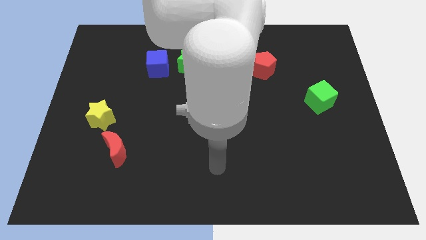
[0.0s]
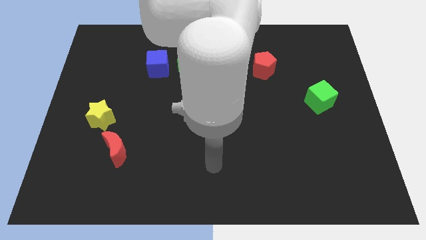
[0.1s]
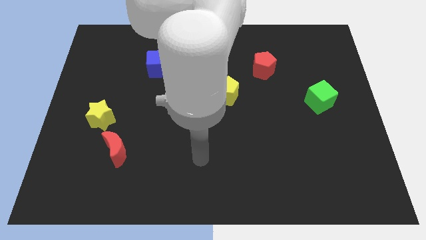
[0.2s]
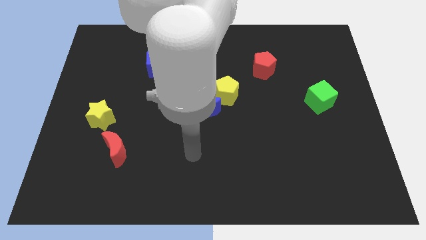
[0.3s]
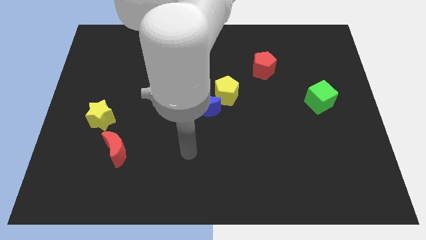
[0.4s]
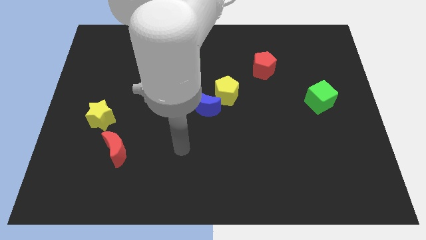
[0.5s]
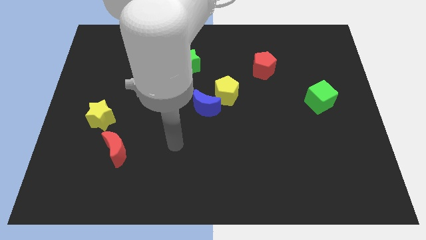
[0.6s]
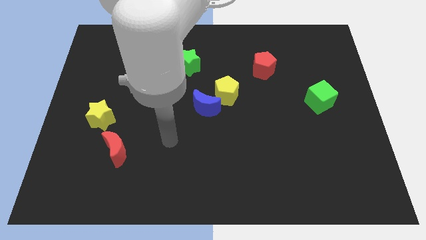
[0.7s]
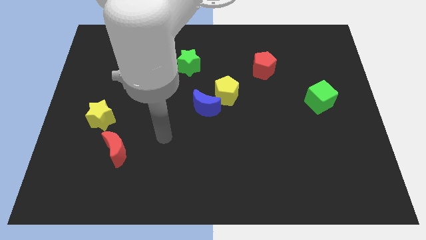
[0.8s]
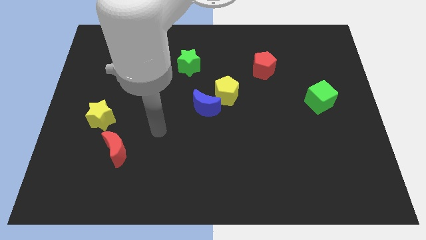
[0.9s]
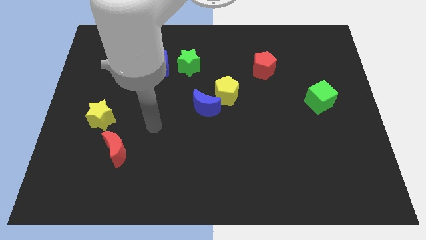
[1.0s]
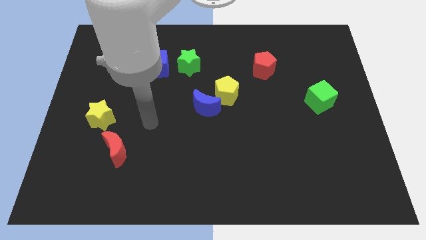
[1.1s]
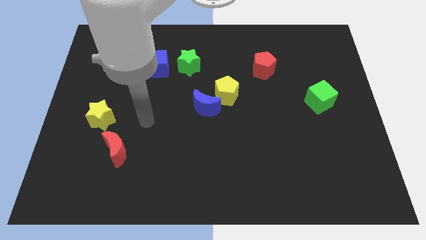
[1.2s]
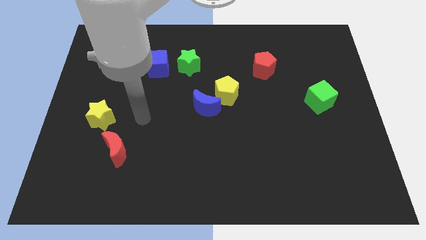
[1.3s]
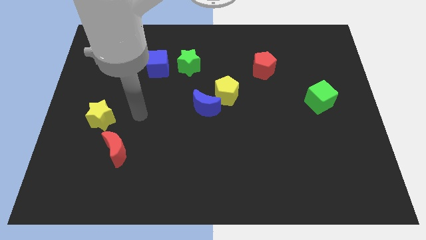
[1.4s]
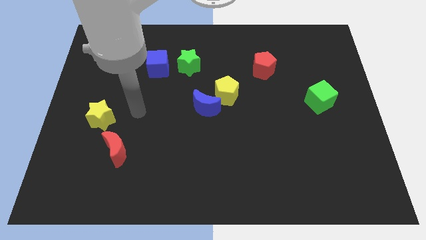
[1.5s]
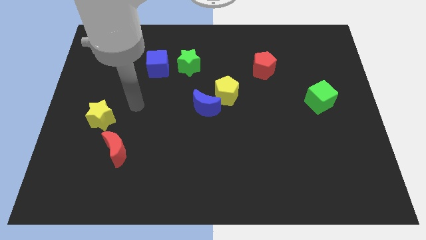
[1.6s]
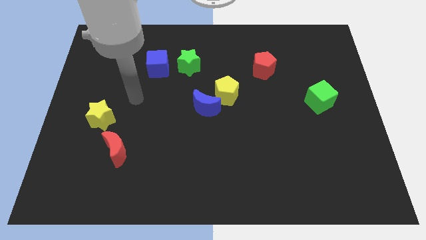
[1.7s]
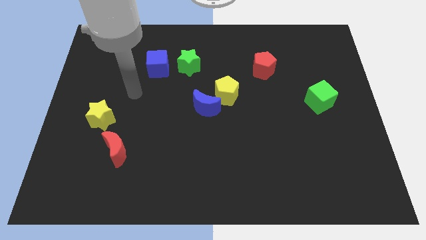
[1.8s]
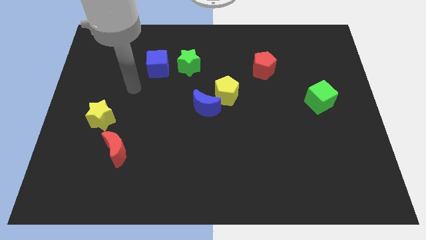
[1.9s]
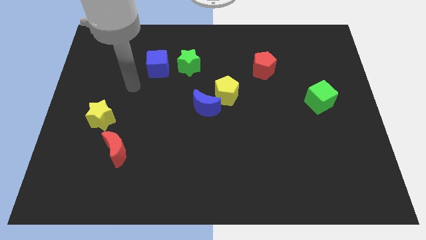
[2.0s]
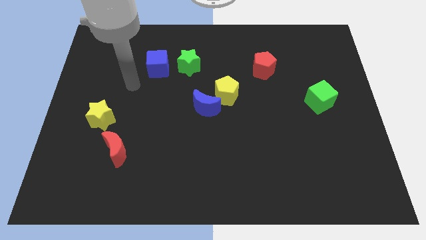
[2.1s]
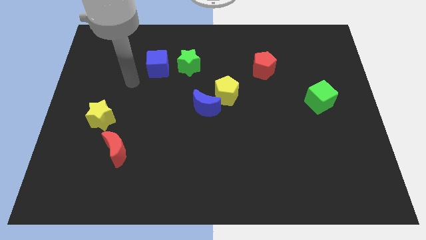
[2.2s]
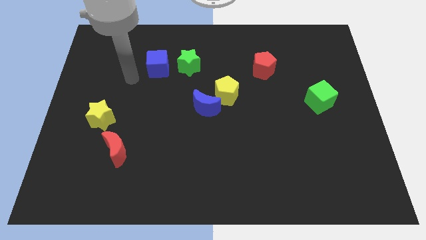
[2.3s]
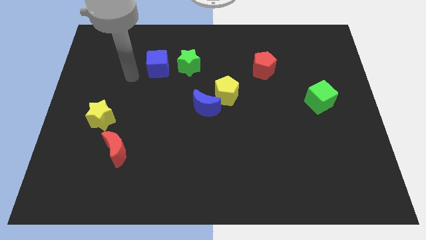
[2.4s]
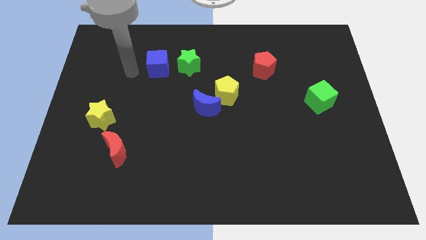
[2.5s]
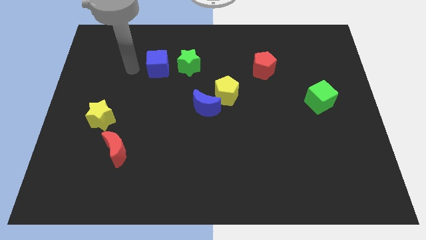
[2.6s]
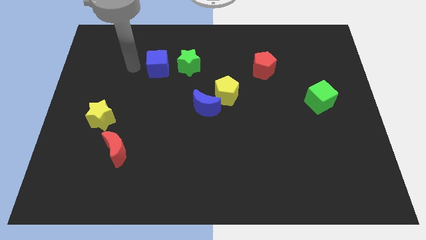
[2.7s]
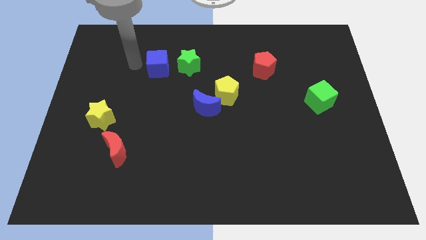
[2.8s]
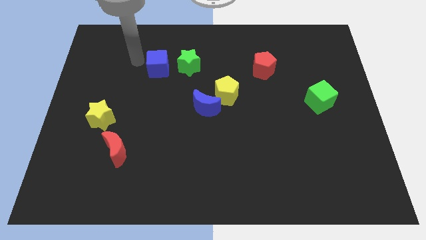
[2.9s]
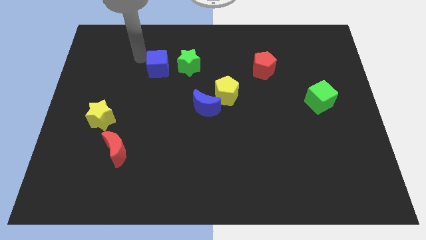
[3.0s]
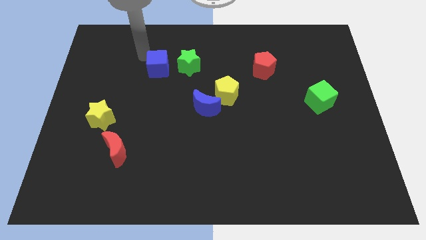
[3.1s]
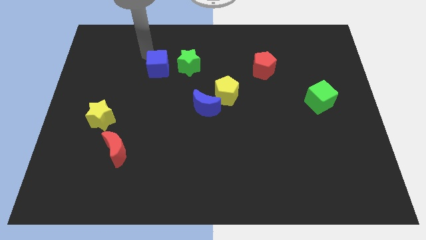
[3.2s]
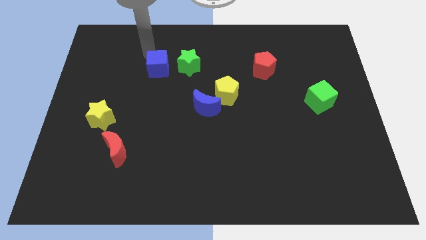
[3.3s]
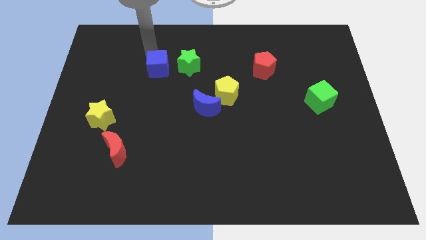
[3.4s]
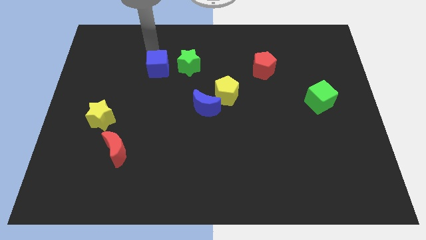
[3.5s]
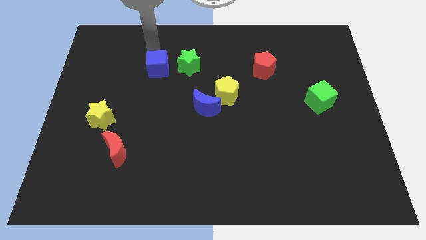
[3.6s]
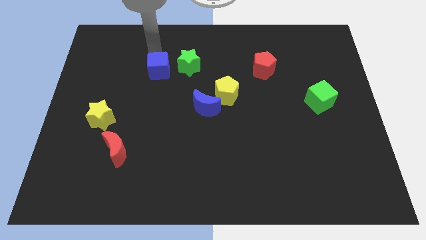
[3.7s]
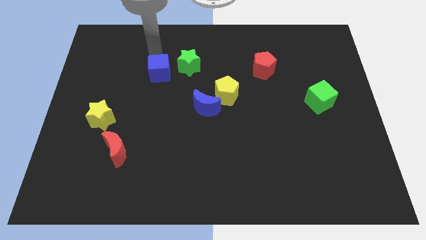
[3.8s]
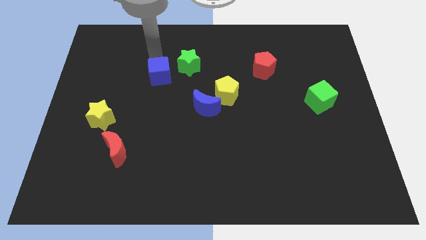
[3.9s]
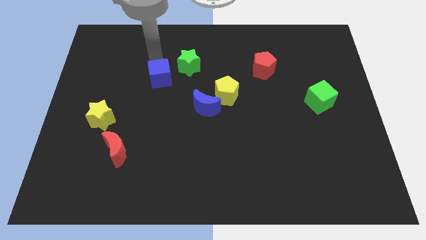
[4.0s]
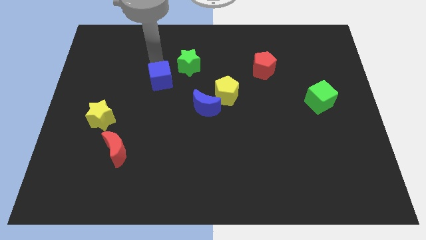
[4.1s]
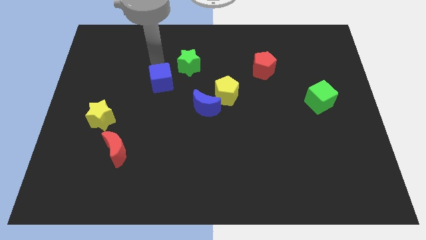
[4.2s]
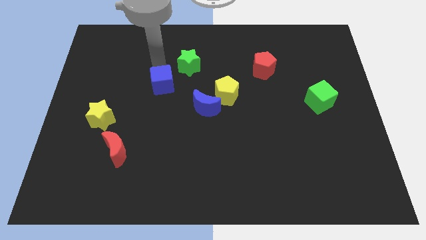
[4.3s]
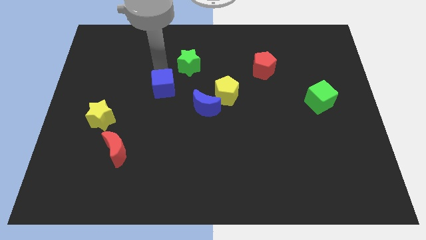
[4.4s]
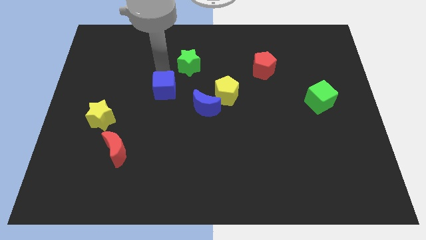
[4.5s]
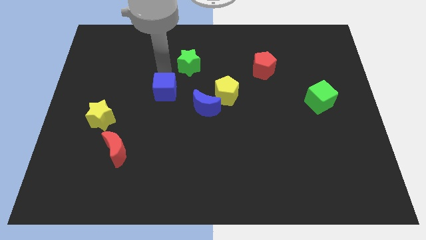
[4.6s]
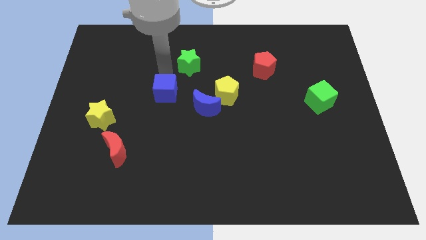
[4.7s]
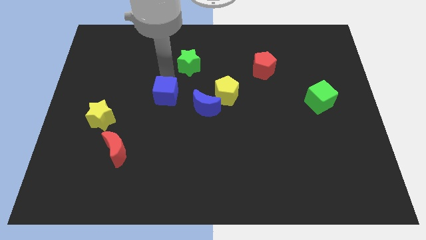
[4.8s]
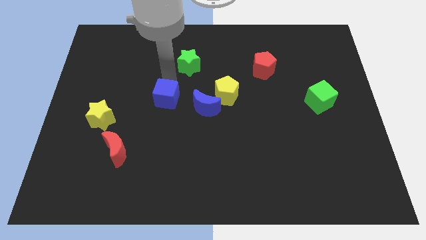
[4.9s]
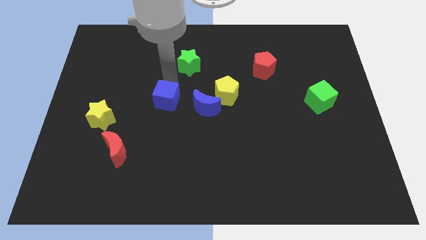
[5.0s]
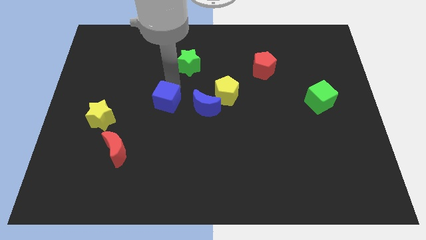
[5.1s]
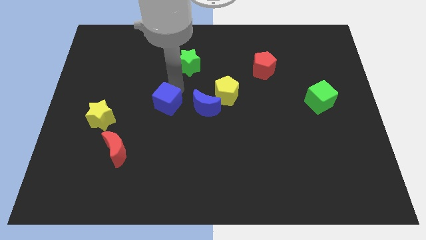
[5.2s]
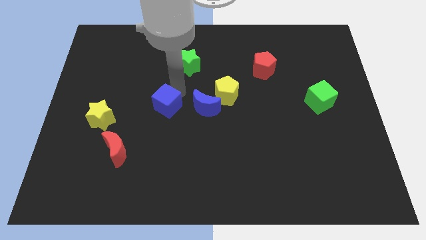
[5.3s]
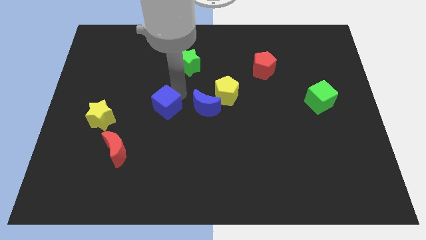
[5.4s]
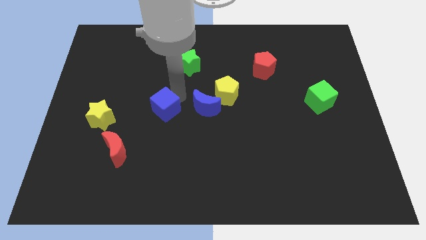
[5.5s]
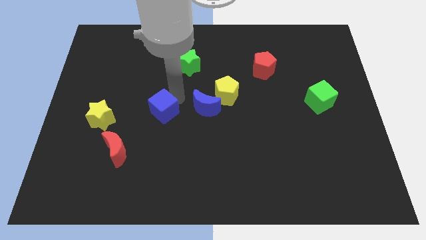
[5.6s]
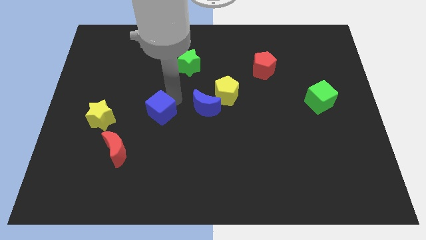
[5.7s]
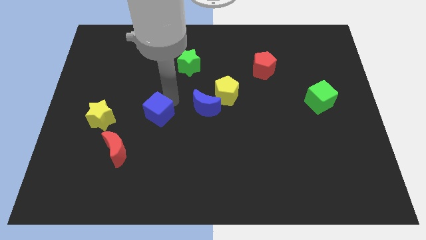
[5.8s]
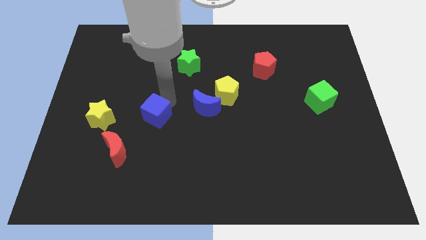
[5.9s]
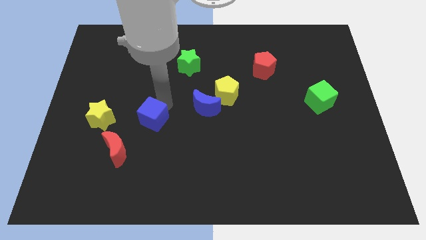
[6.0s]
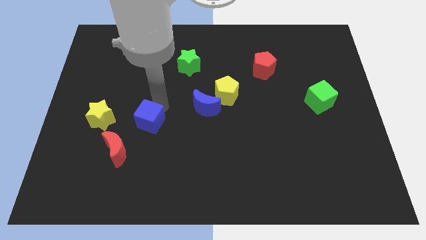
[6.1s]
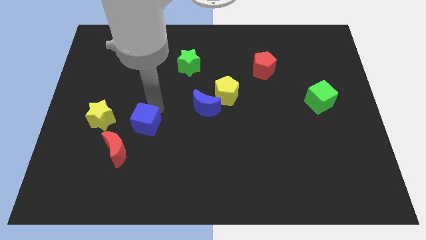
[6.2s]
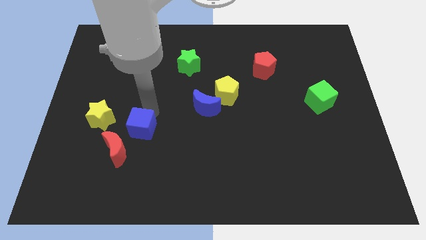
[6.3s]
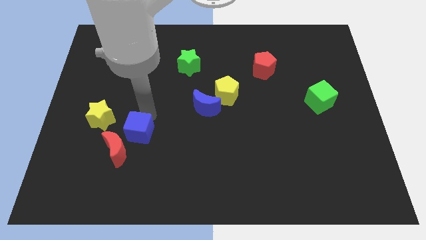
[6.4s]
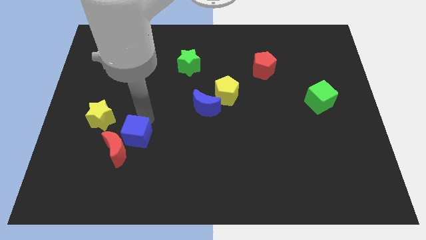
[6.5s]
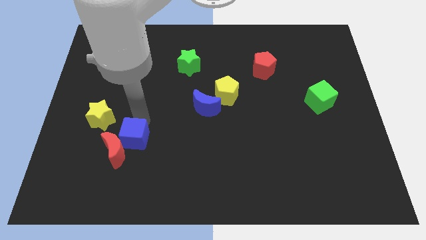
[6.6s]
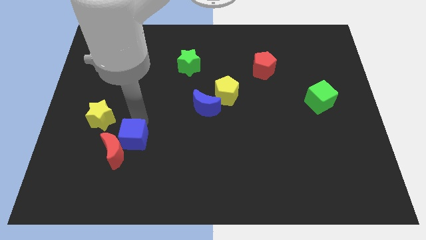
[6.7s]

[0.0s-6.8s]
put the blue cube close to the red moon

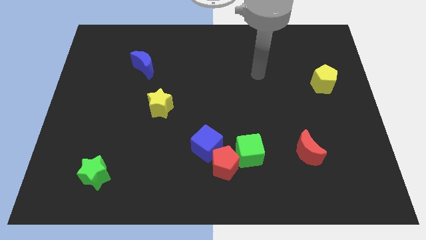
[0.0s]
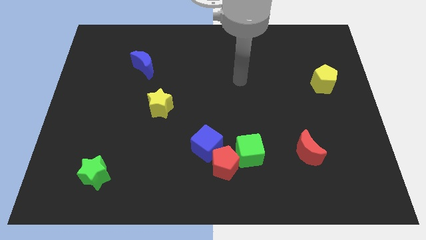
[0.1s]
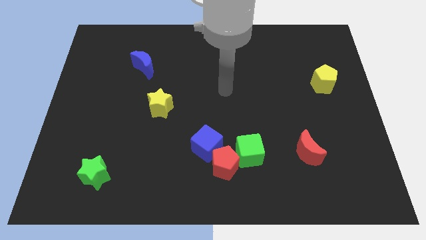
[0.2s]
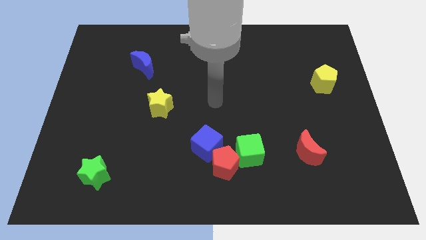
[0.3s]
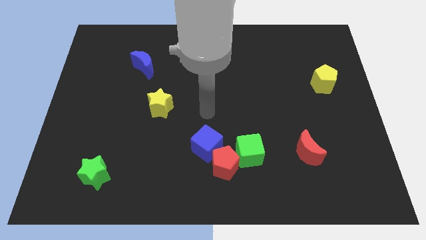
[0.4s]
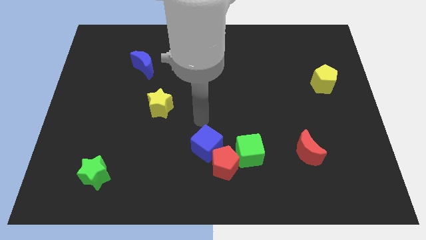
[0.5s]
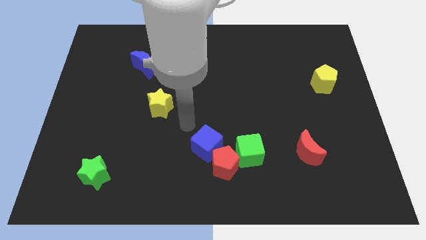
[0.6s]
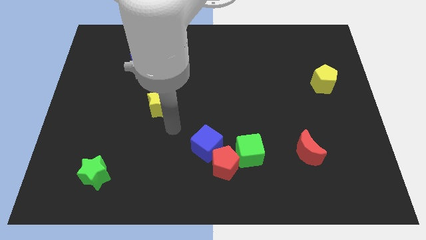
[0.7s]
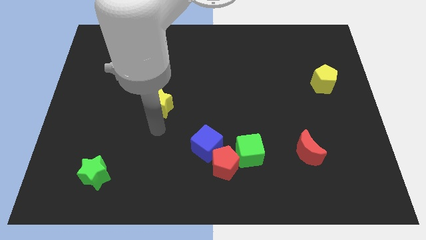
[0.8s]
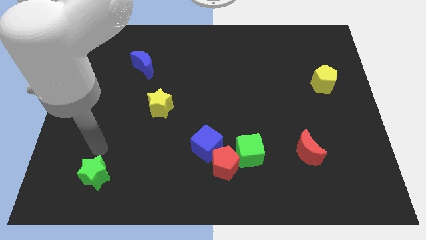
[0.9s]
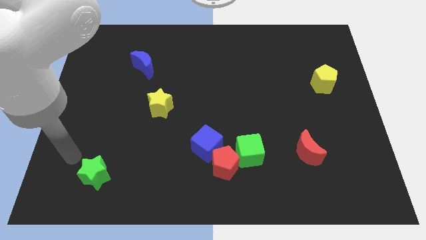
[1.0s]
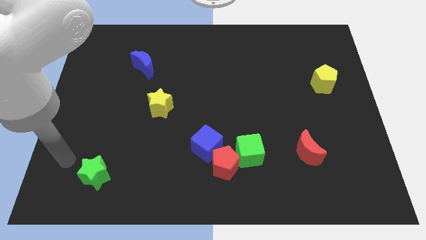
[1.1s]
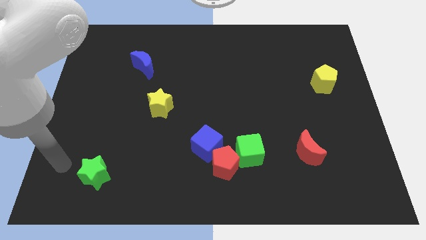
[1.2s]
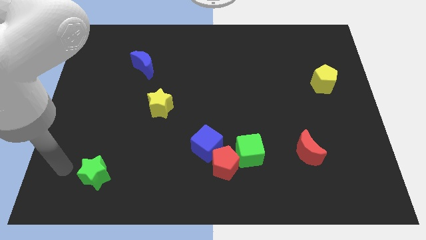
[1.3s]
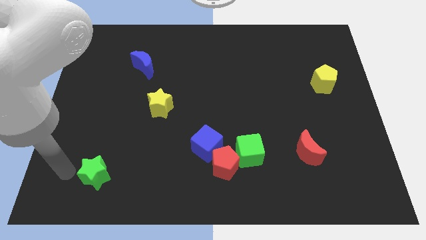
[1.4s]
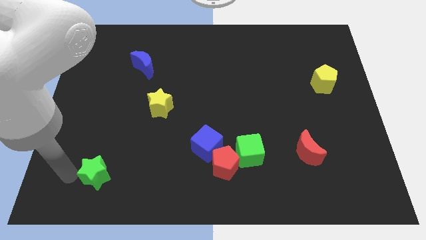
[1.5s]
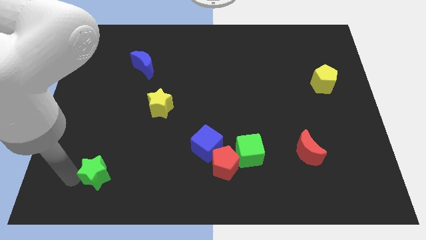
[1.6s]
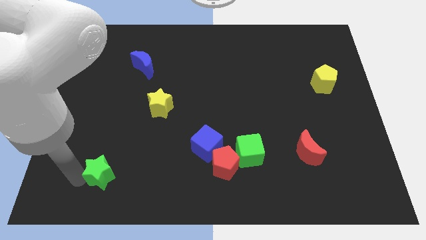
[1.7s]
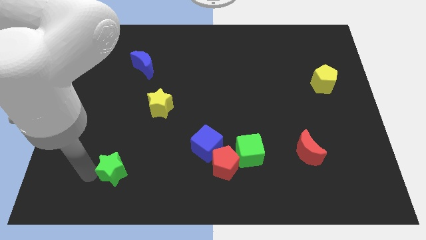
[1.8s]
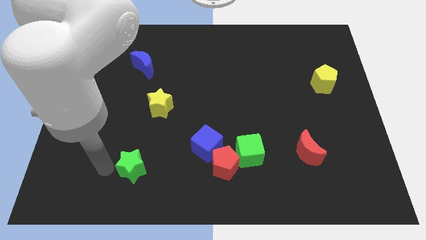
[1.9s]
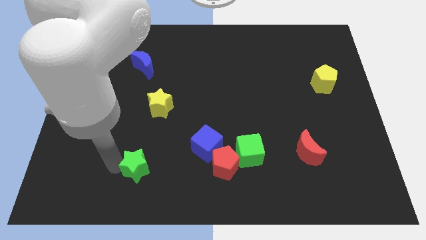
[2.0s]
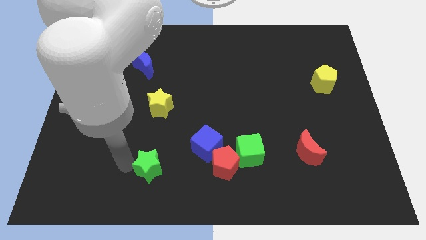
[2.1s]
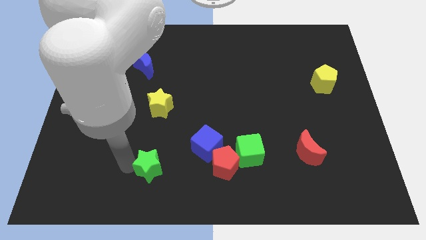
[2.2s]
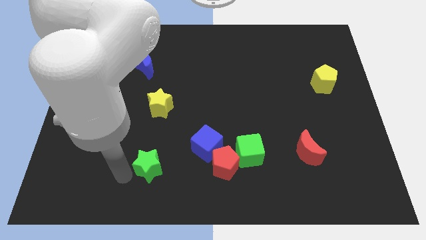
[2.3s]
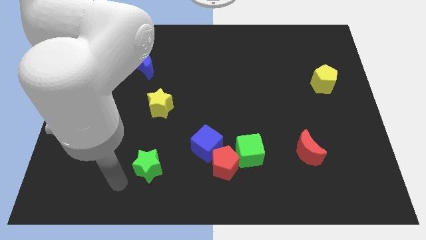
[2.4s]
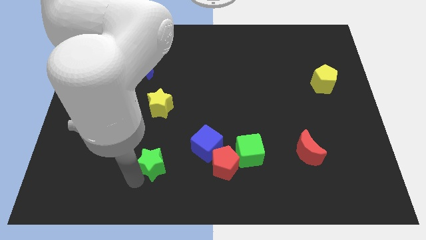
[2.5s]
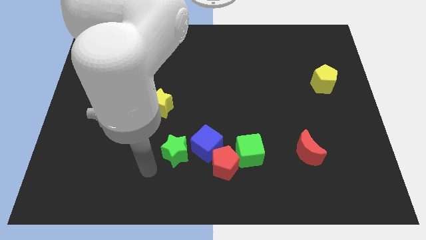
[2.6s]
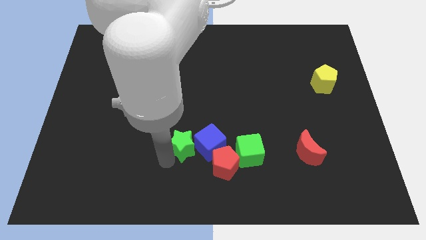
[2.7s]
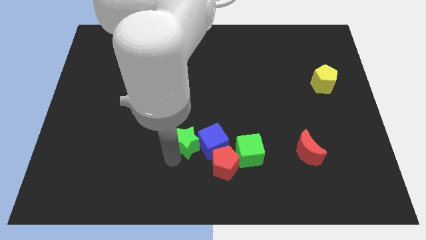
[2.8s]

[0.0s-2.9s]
put the green star towards the blue cube
